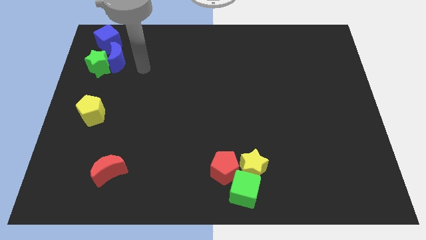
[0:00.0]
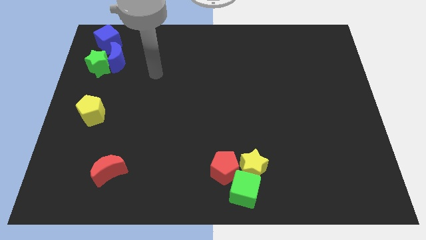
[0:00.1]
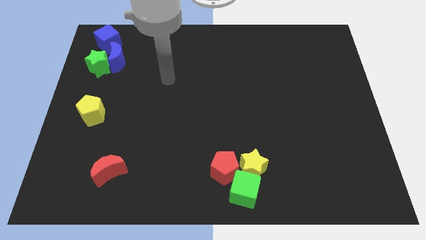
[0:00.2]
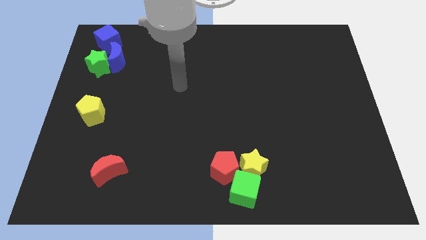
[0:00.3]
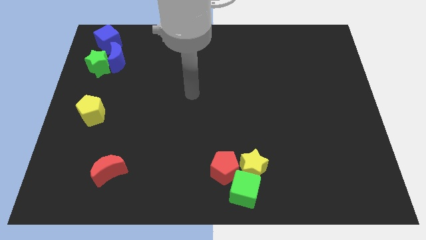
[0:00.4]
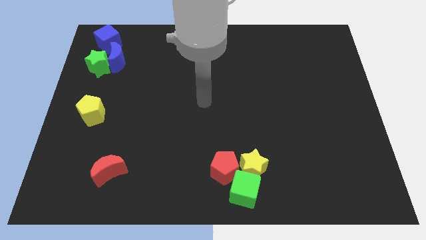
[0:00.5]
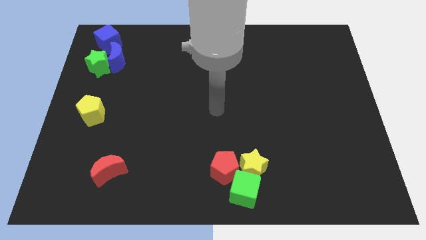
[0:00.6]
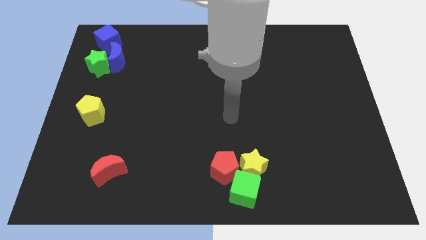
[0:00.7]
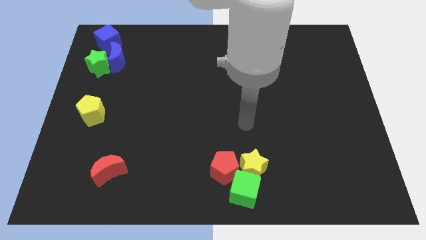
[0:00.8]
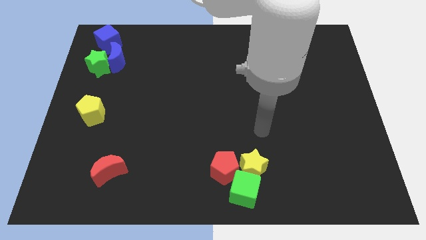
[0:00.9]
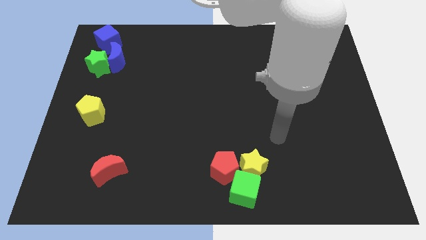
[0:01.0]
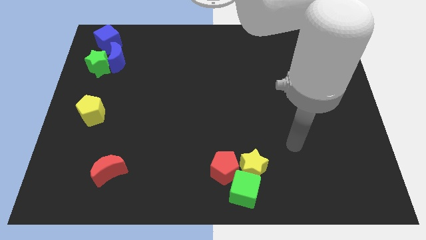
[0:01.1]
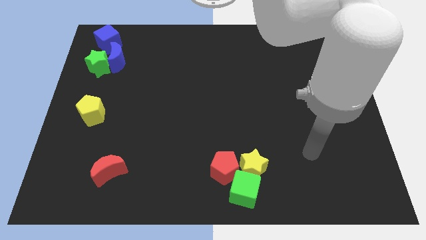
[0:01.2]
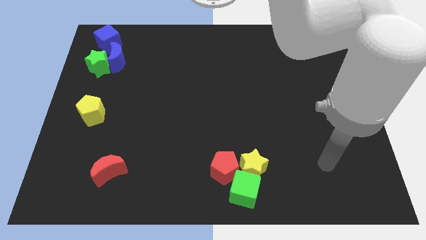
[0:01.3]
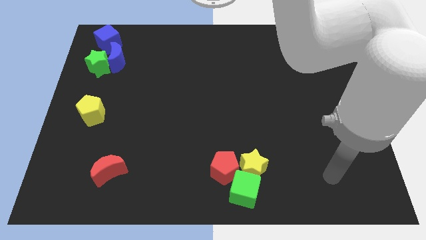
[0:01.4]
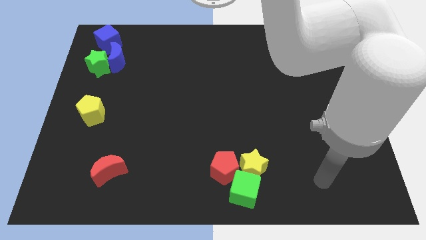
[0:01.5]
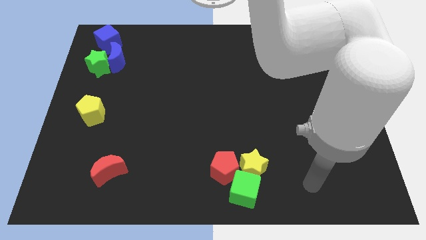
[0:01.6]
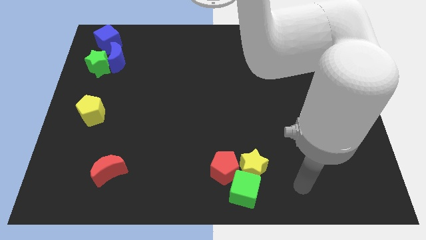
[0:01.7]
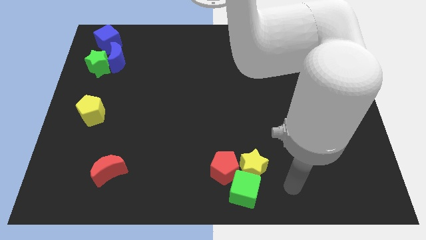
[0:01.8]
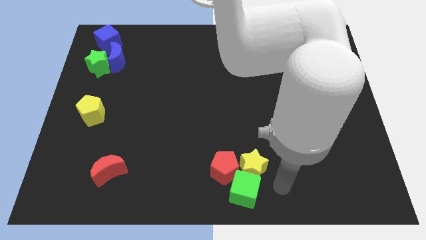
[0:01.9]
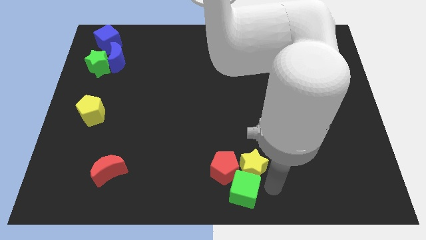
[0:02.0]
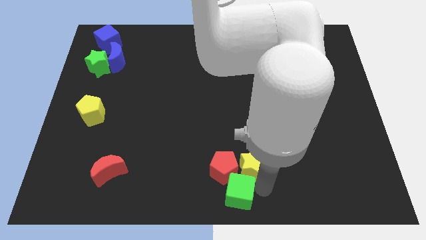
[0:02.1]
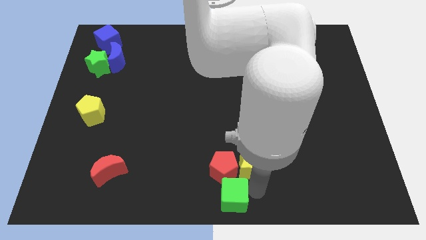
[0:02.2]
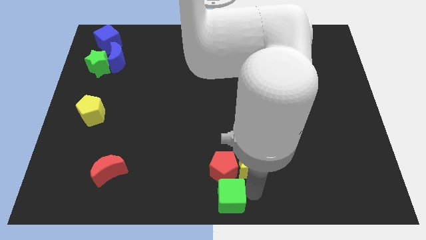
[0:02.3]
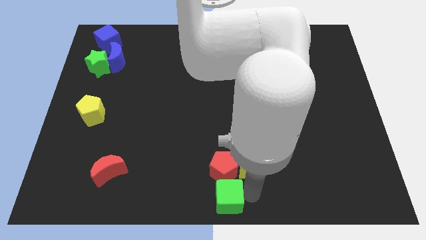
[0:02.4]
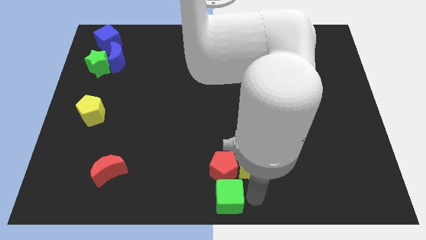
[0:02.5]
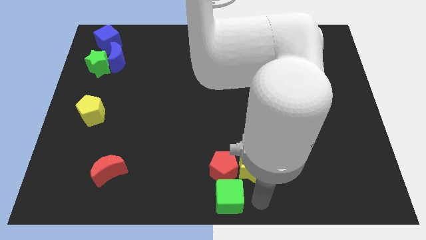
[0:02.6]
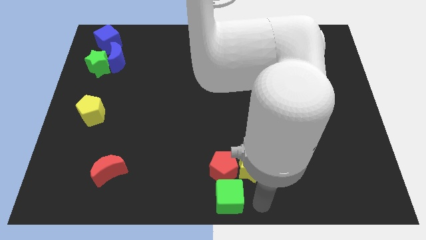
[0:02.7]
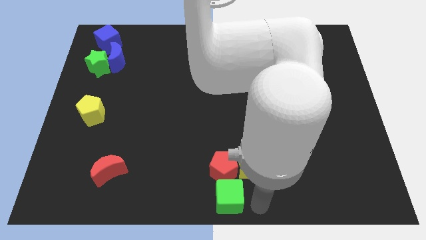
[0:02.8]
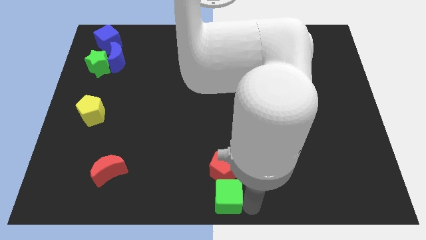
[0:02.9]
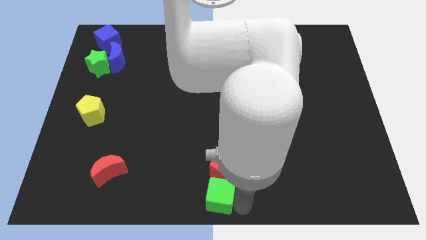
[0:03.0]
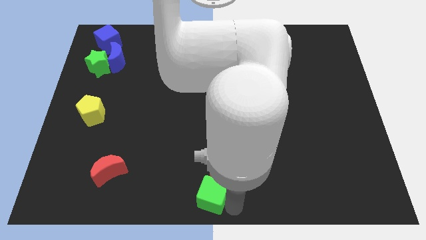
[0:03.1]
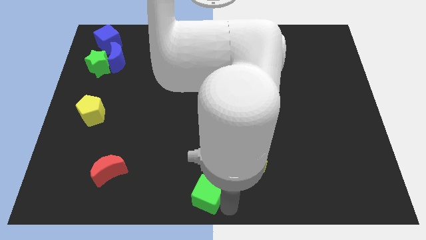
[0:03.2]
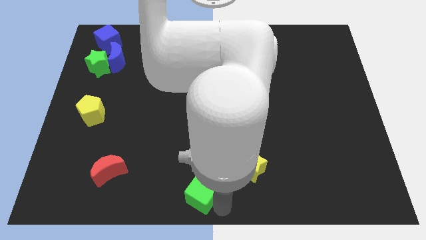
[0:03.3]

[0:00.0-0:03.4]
push the green cube below the red pentagon

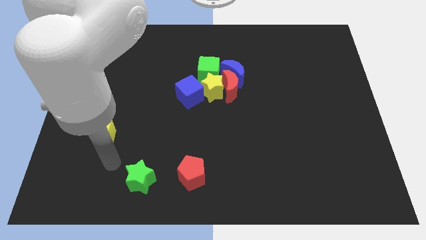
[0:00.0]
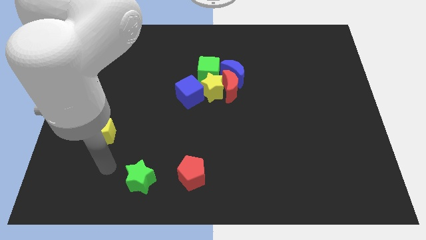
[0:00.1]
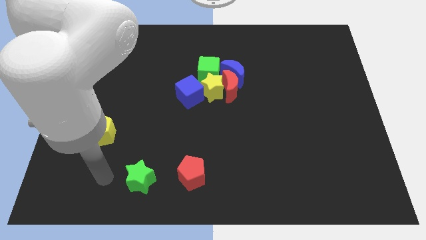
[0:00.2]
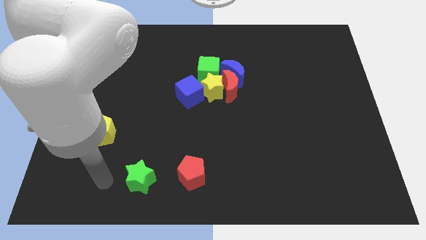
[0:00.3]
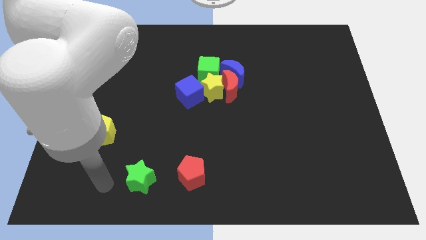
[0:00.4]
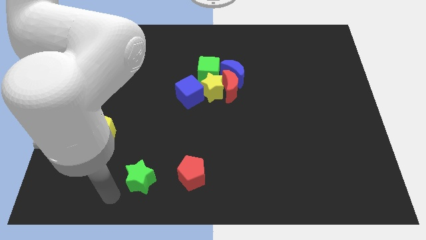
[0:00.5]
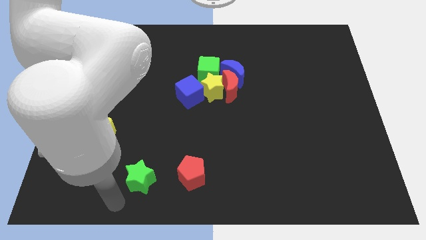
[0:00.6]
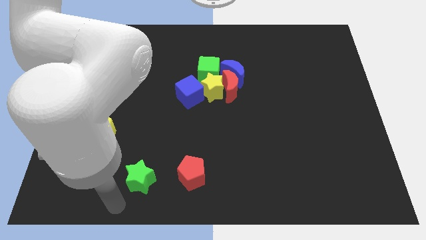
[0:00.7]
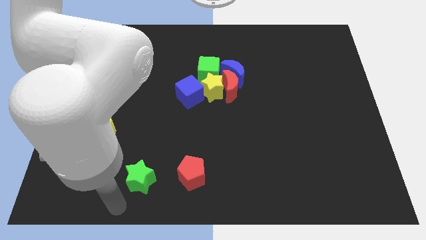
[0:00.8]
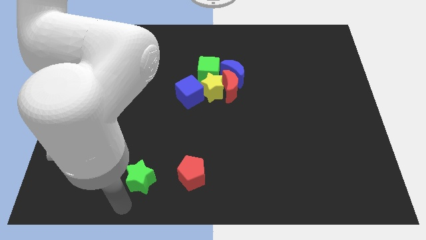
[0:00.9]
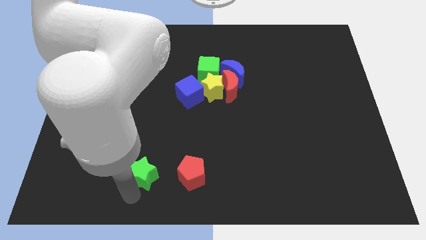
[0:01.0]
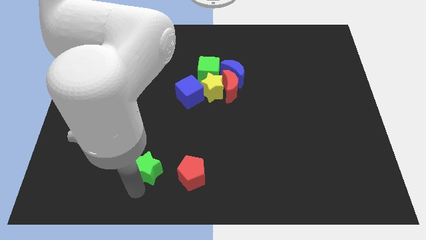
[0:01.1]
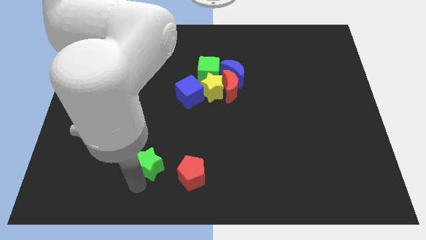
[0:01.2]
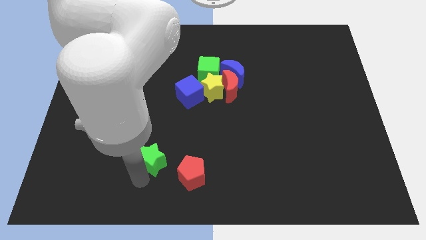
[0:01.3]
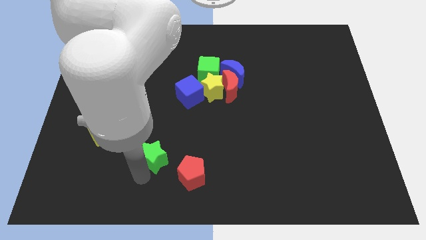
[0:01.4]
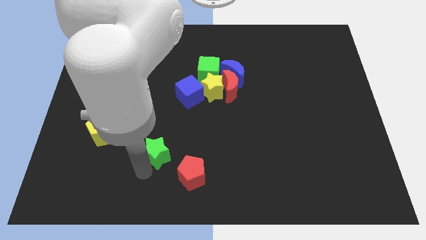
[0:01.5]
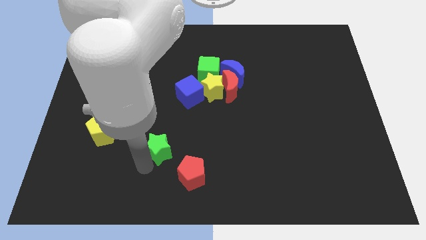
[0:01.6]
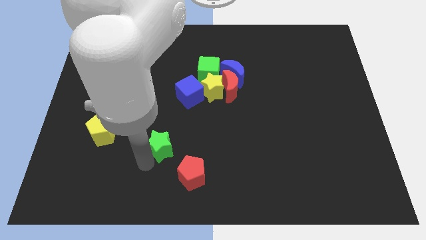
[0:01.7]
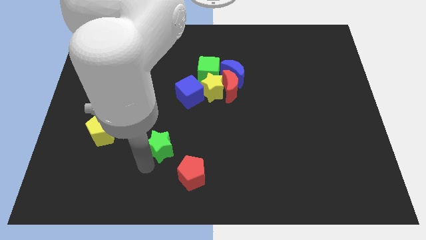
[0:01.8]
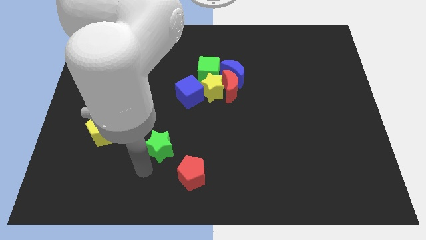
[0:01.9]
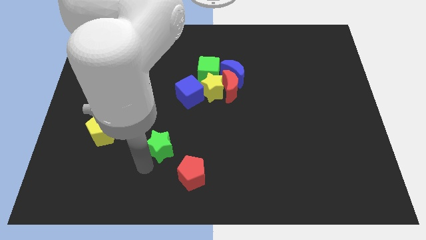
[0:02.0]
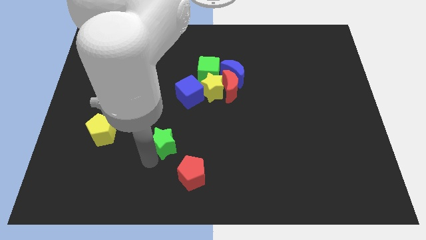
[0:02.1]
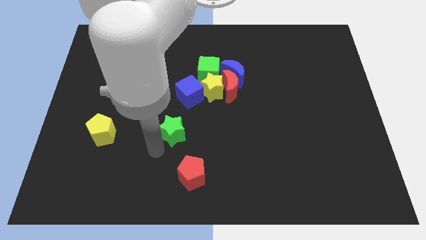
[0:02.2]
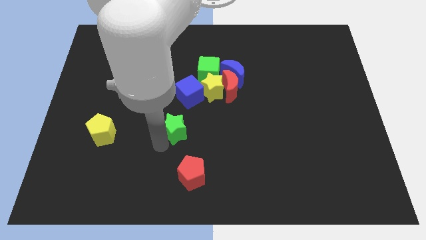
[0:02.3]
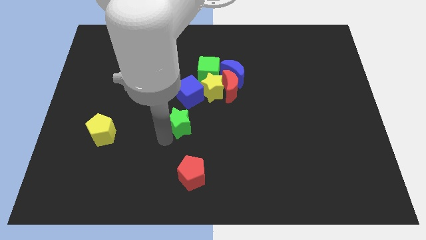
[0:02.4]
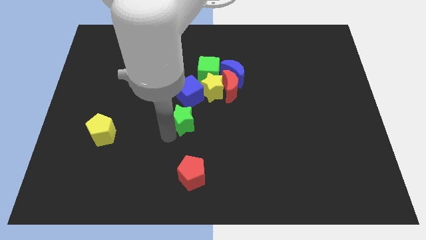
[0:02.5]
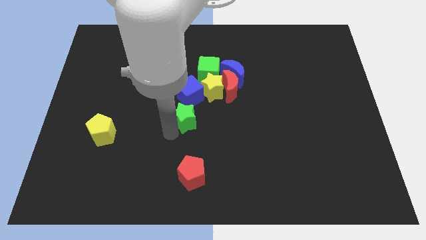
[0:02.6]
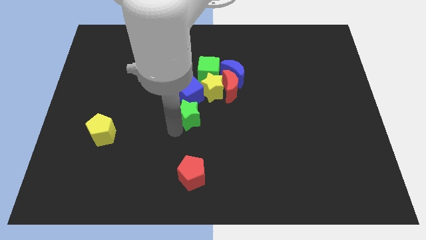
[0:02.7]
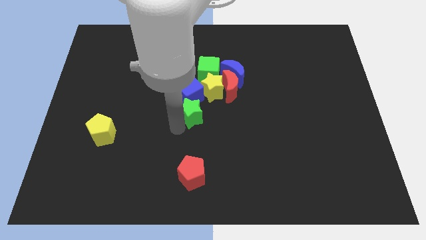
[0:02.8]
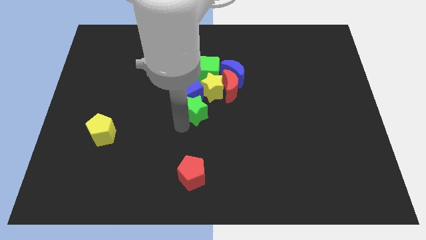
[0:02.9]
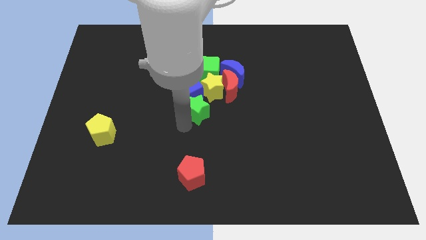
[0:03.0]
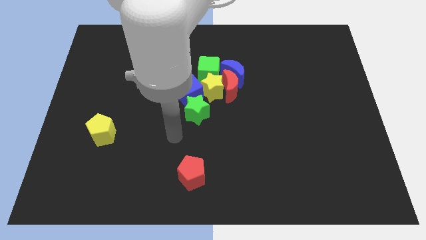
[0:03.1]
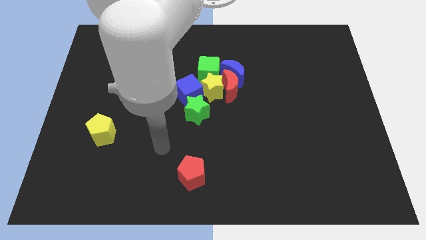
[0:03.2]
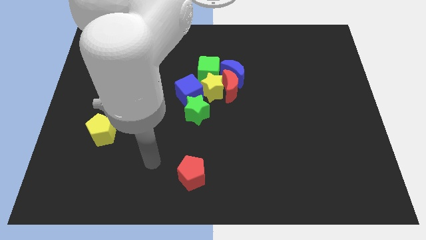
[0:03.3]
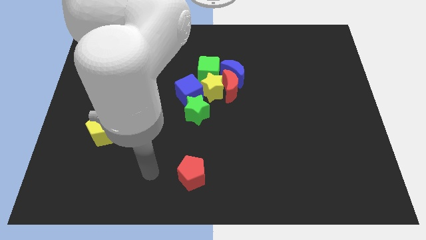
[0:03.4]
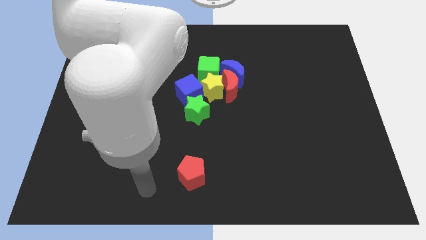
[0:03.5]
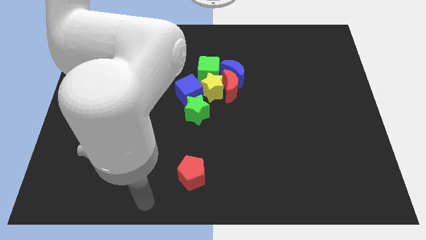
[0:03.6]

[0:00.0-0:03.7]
push green star towards center

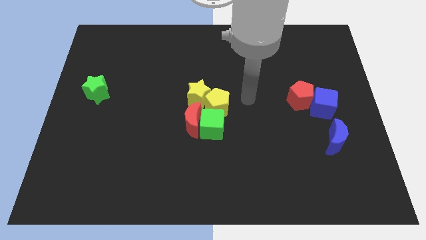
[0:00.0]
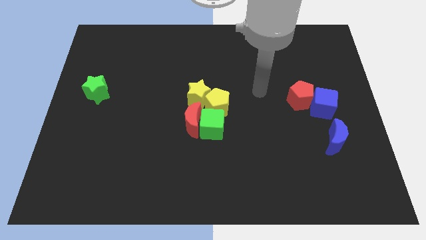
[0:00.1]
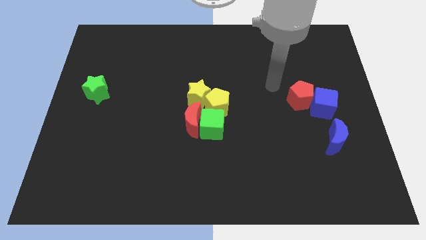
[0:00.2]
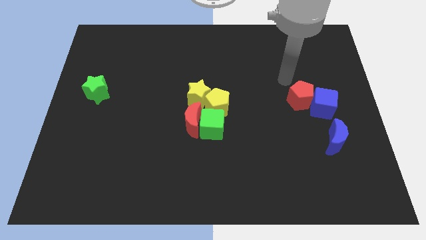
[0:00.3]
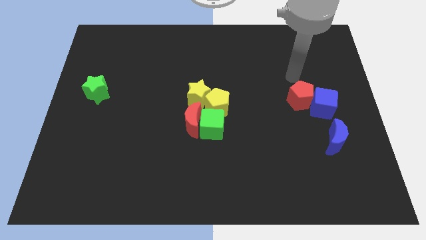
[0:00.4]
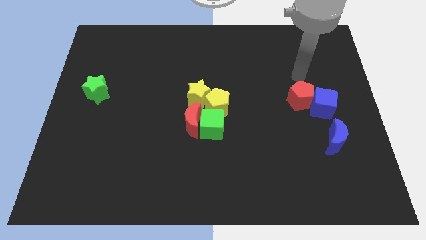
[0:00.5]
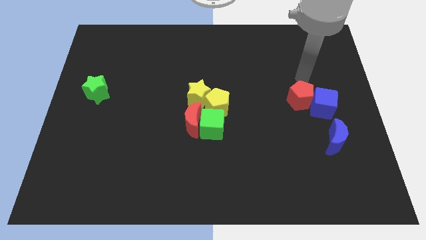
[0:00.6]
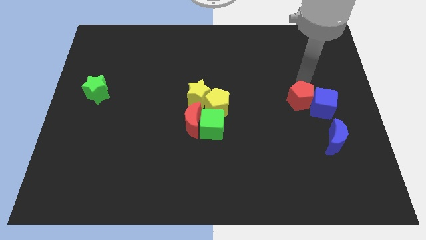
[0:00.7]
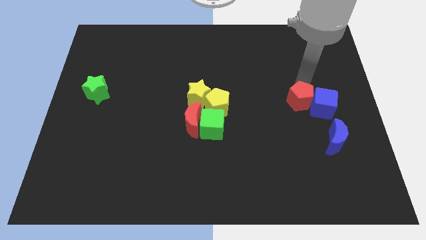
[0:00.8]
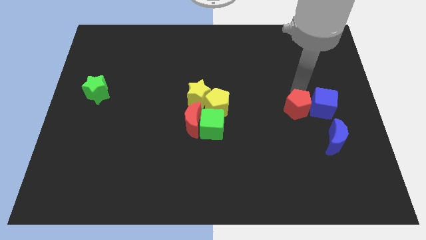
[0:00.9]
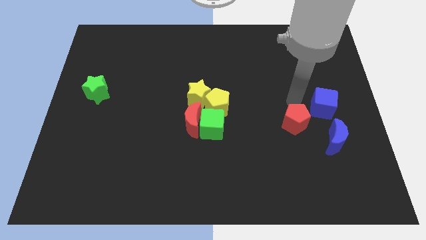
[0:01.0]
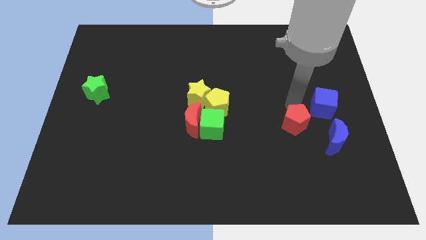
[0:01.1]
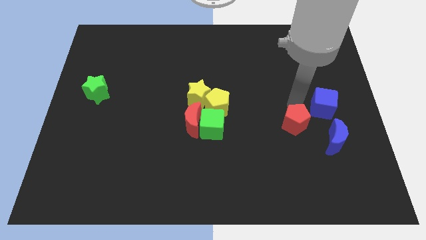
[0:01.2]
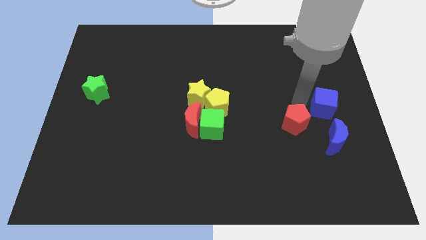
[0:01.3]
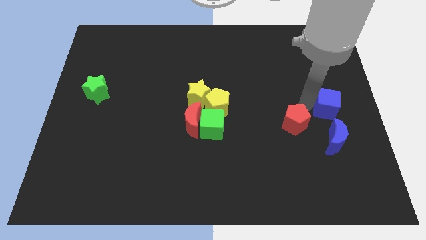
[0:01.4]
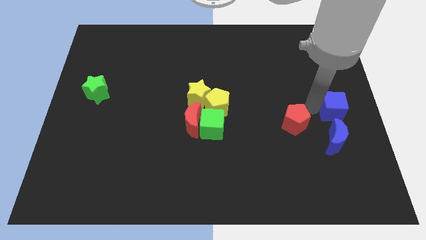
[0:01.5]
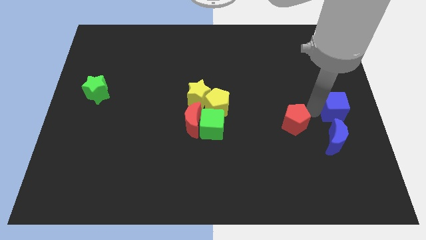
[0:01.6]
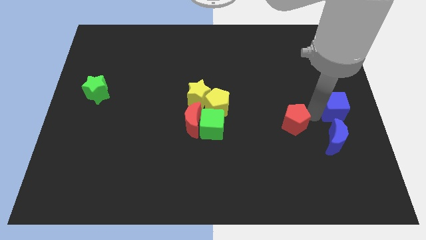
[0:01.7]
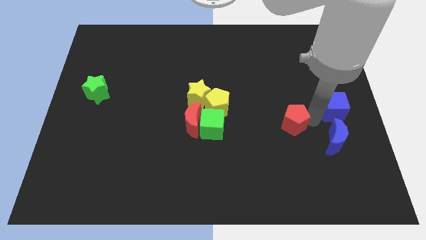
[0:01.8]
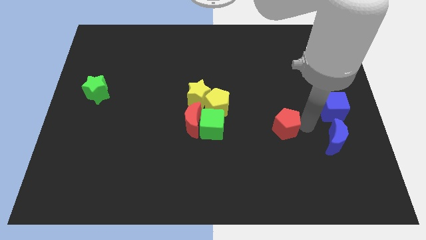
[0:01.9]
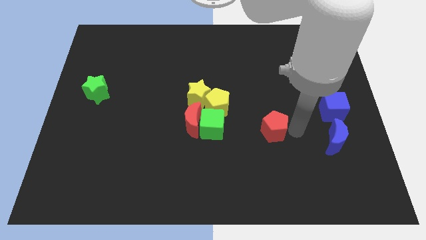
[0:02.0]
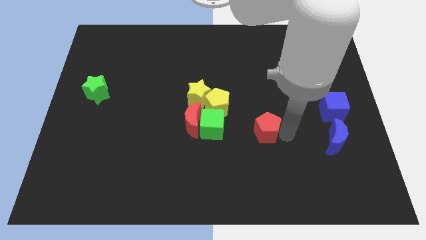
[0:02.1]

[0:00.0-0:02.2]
separate the red pentagon from blue cube
